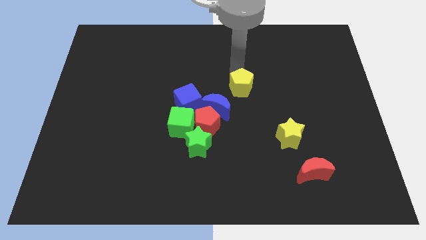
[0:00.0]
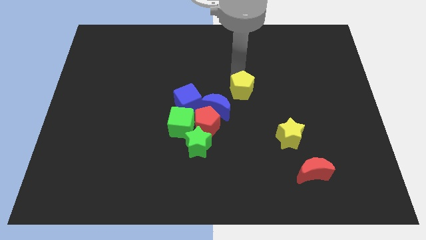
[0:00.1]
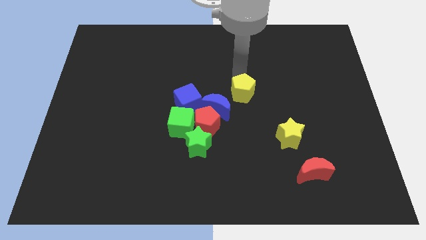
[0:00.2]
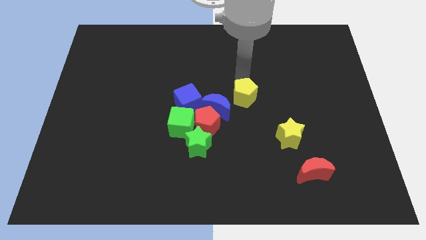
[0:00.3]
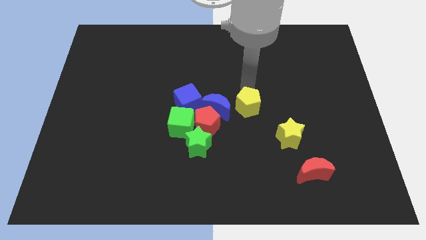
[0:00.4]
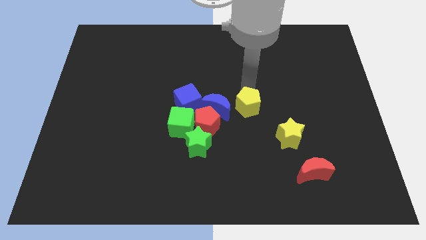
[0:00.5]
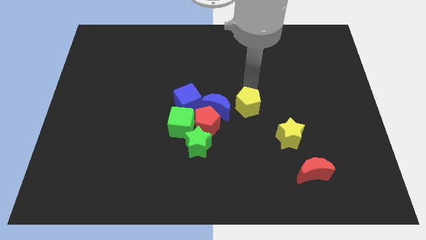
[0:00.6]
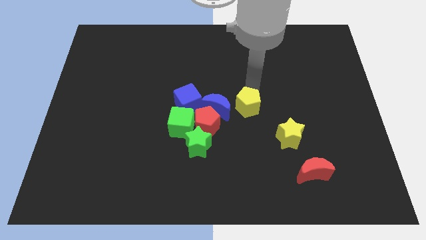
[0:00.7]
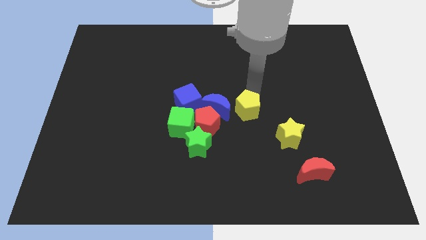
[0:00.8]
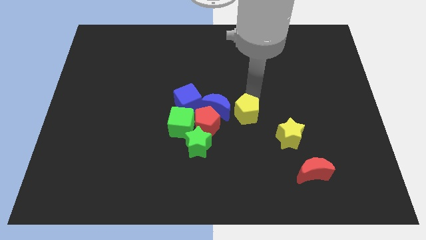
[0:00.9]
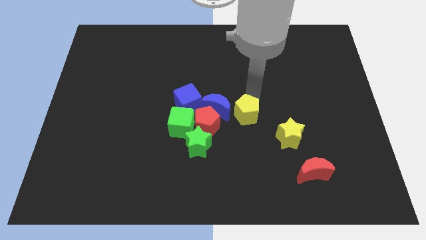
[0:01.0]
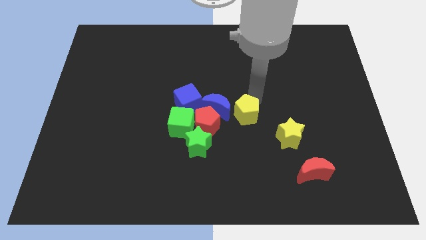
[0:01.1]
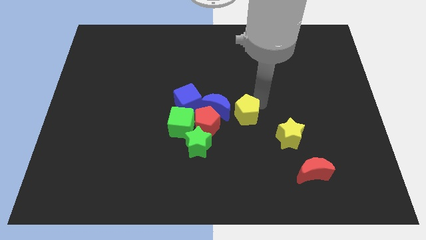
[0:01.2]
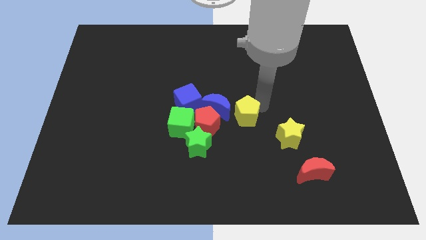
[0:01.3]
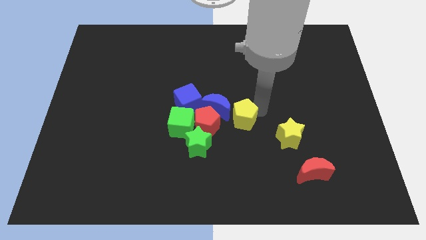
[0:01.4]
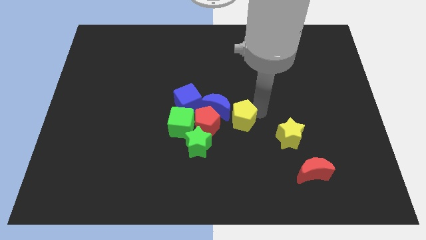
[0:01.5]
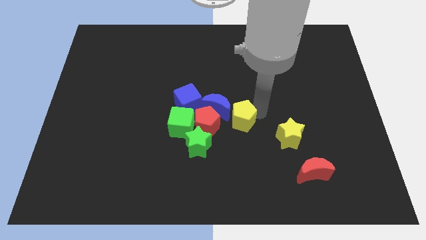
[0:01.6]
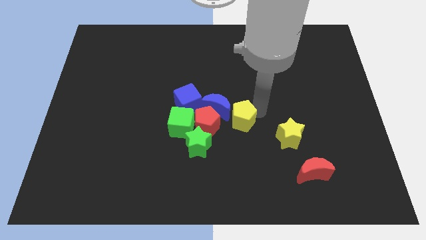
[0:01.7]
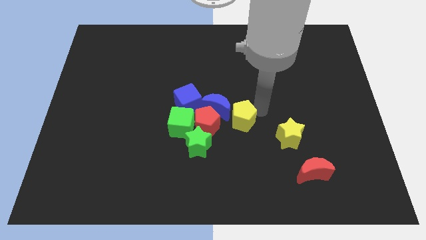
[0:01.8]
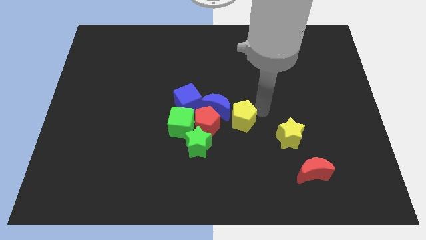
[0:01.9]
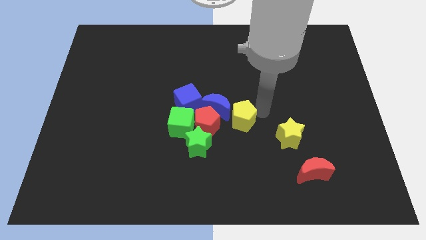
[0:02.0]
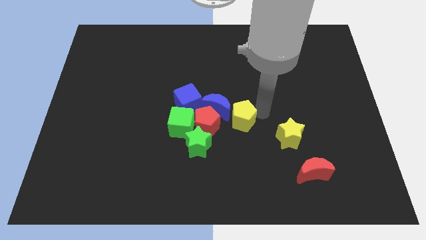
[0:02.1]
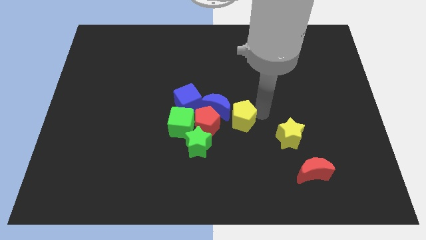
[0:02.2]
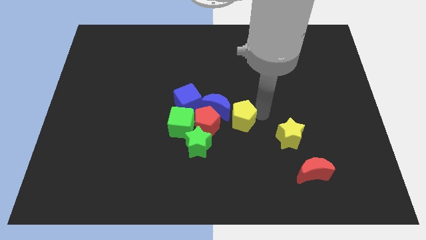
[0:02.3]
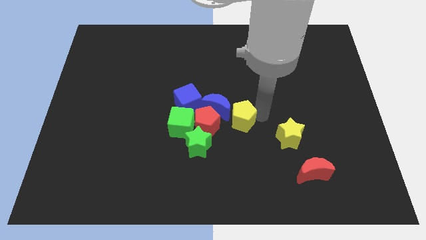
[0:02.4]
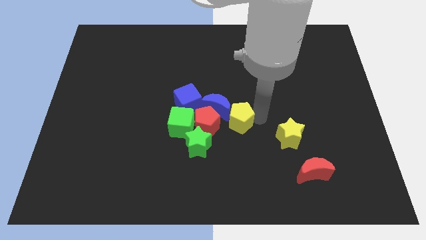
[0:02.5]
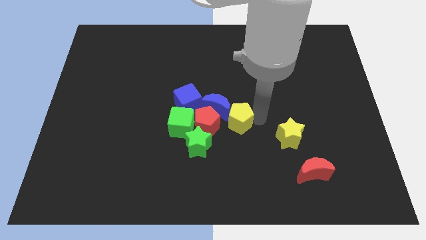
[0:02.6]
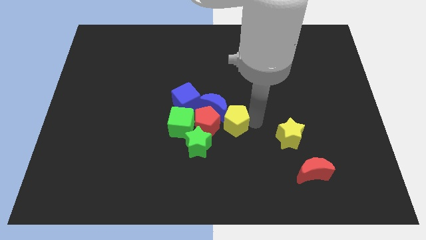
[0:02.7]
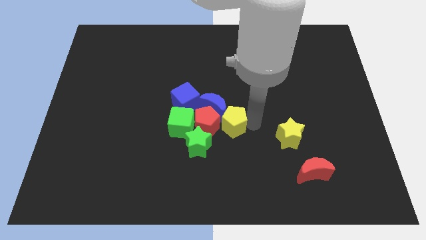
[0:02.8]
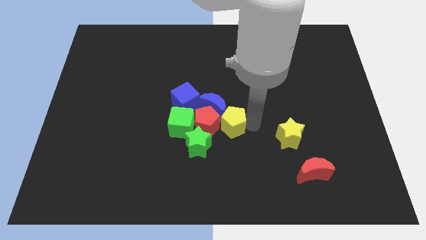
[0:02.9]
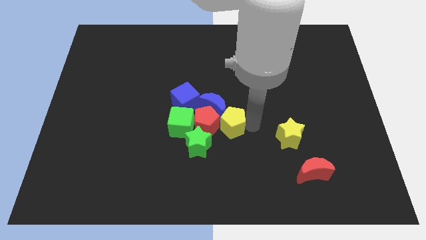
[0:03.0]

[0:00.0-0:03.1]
bring the yellow pentagon into the right side of the red pentagon

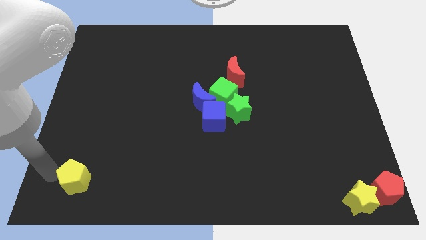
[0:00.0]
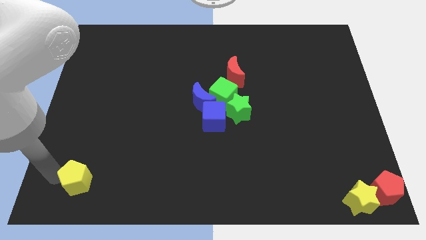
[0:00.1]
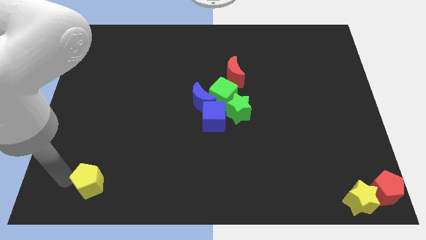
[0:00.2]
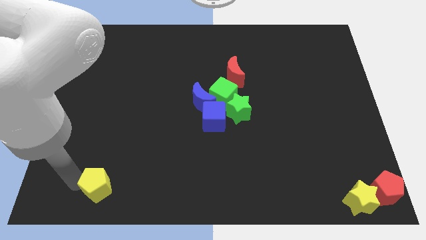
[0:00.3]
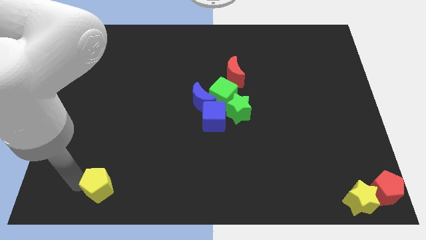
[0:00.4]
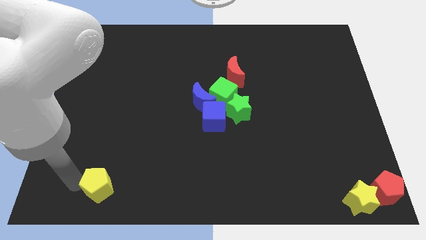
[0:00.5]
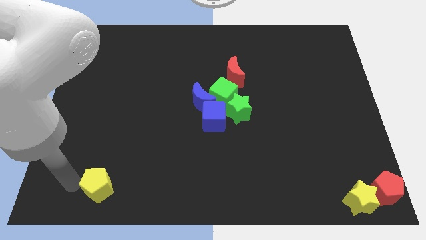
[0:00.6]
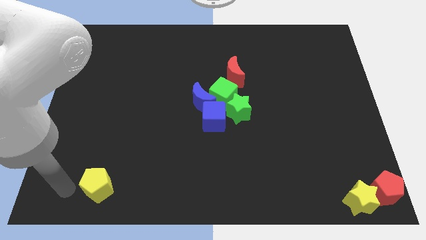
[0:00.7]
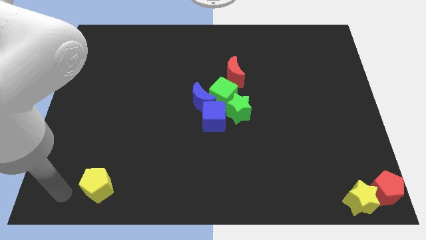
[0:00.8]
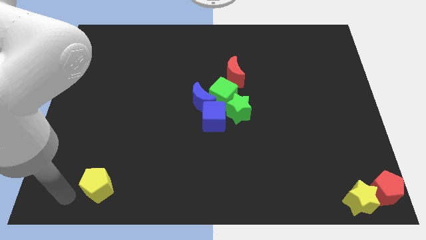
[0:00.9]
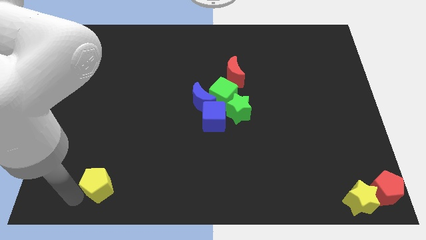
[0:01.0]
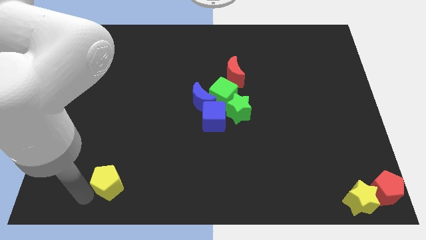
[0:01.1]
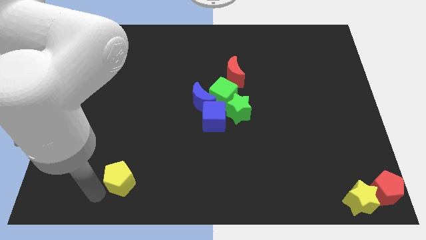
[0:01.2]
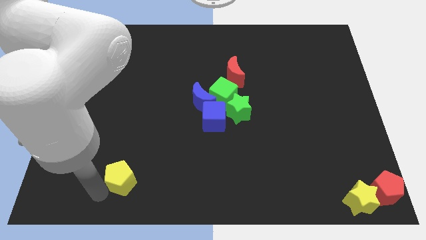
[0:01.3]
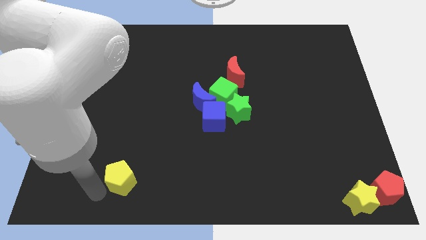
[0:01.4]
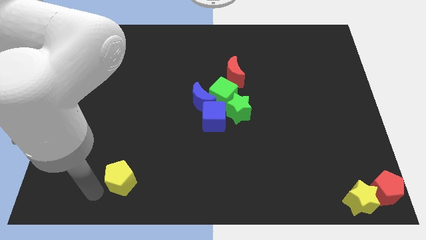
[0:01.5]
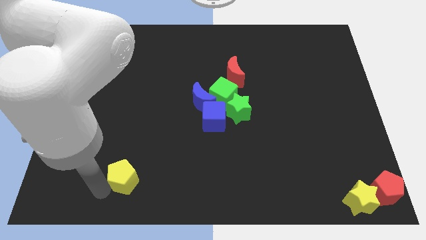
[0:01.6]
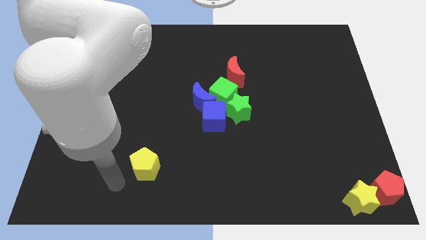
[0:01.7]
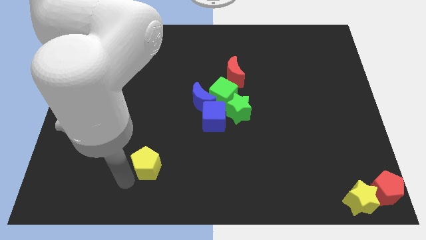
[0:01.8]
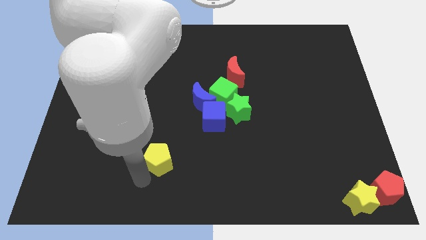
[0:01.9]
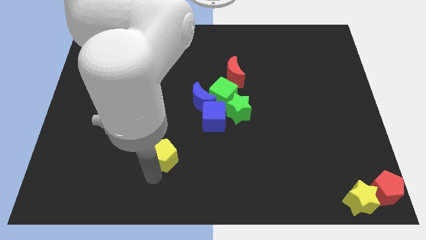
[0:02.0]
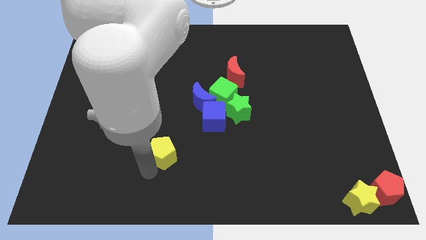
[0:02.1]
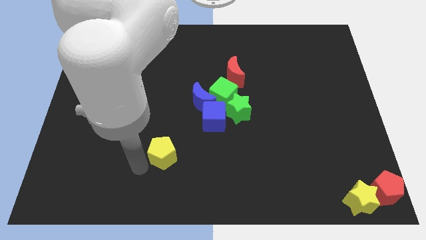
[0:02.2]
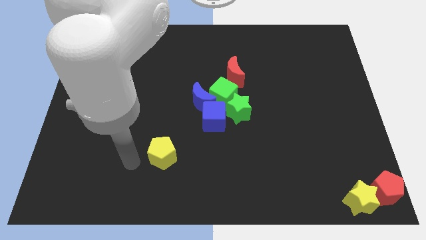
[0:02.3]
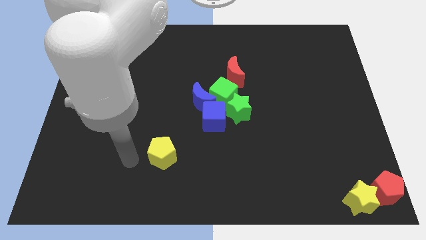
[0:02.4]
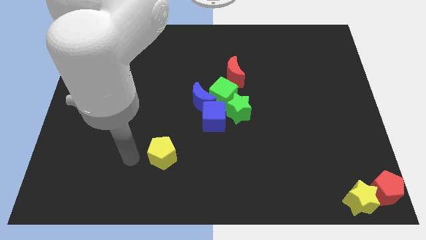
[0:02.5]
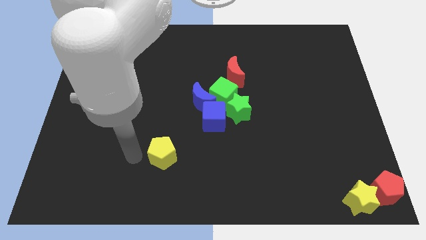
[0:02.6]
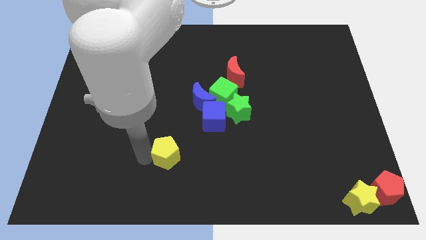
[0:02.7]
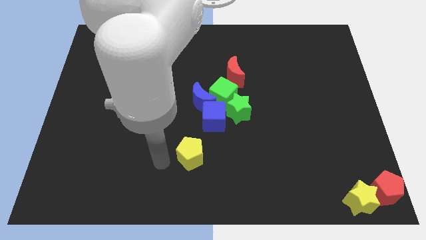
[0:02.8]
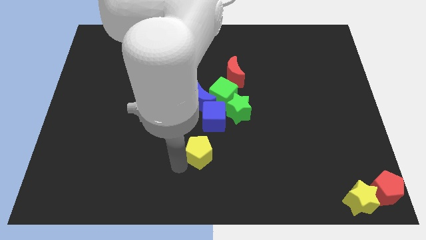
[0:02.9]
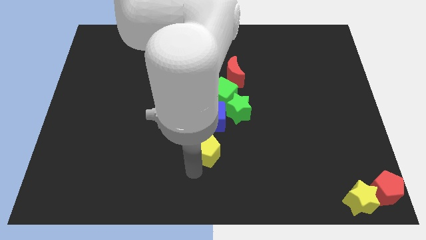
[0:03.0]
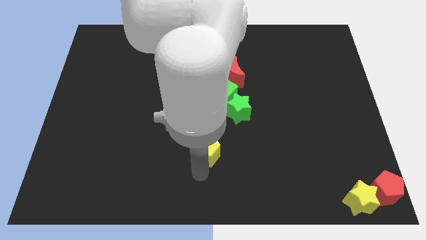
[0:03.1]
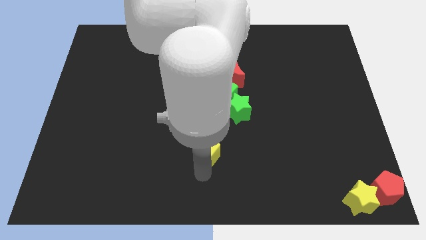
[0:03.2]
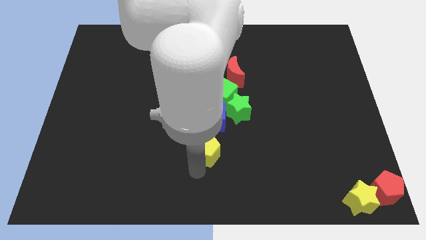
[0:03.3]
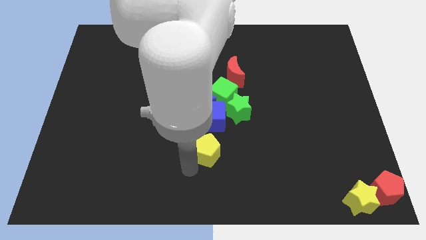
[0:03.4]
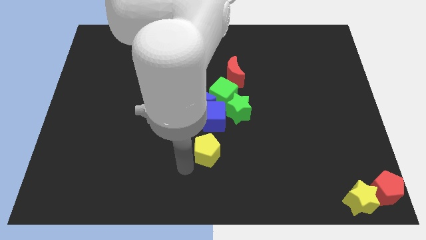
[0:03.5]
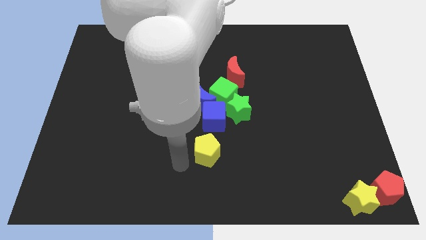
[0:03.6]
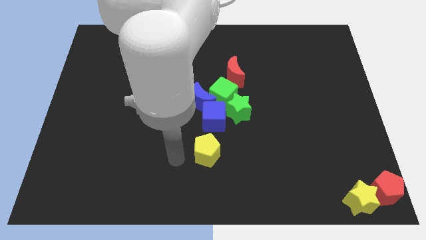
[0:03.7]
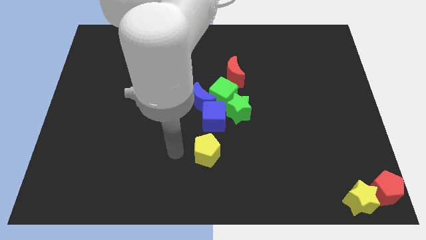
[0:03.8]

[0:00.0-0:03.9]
move yellow pentagon to the bottom of blue cube

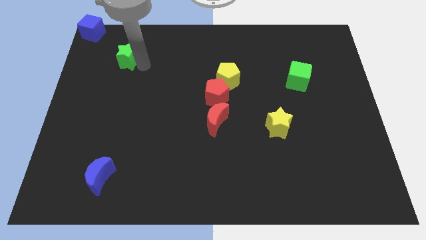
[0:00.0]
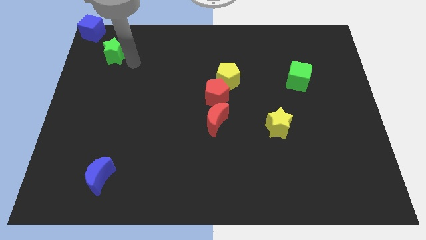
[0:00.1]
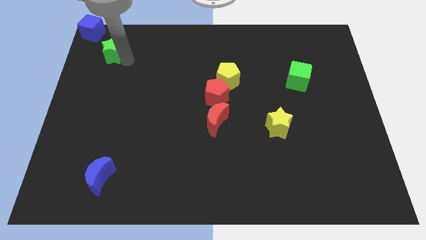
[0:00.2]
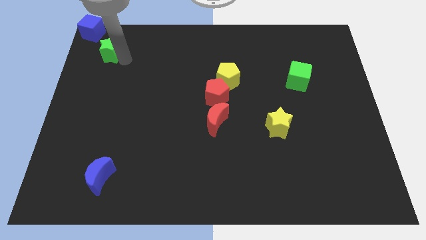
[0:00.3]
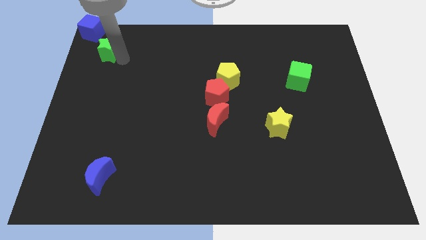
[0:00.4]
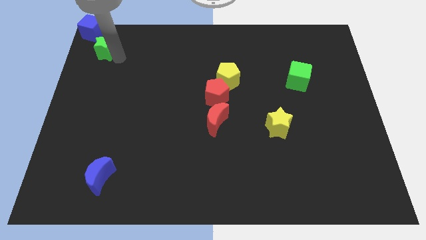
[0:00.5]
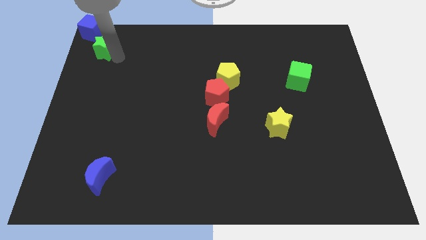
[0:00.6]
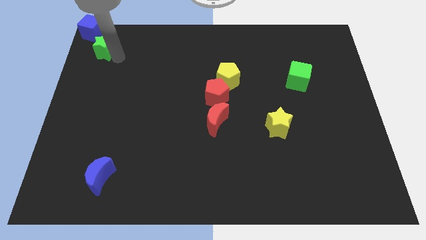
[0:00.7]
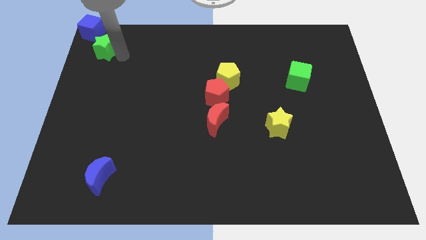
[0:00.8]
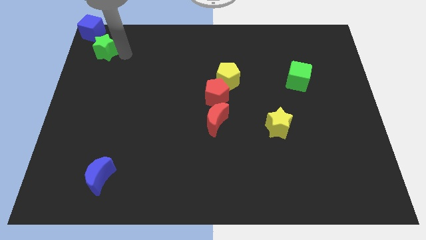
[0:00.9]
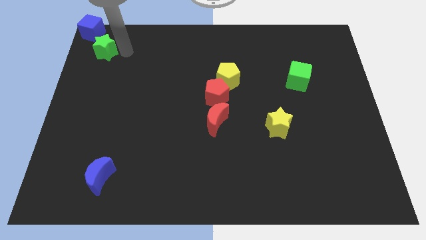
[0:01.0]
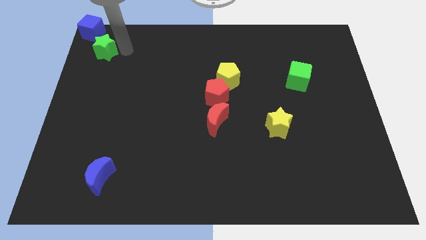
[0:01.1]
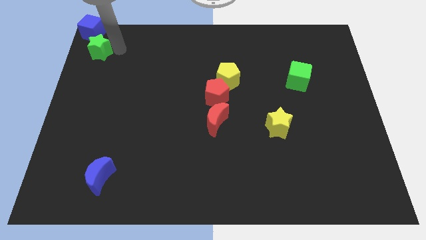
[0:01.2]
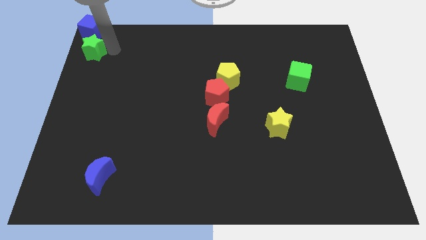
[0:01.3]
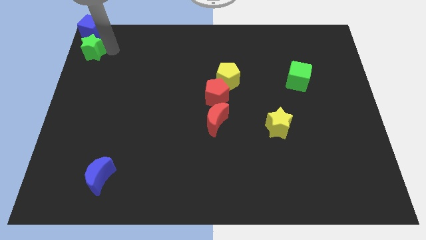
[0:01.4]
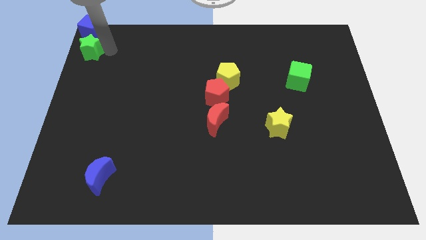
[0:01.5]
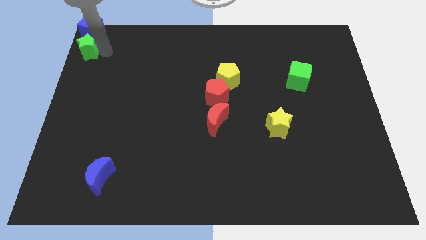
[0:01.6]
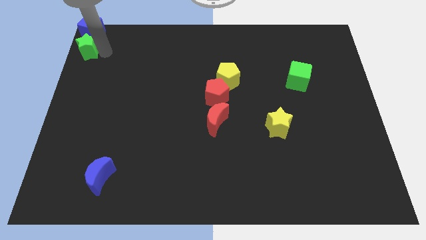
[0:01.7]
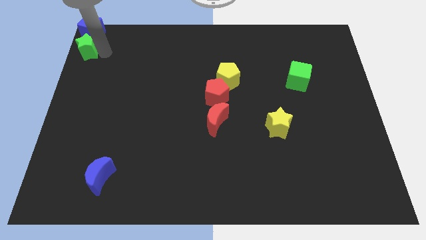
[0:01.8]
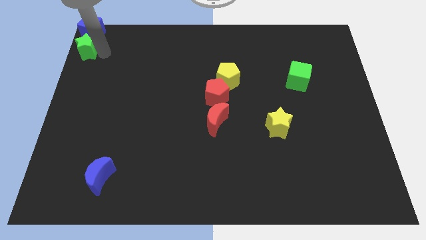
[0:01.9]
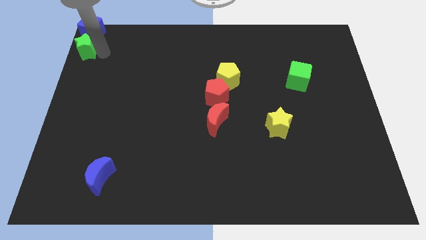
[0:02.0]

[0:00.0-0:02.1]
place the green star below the blue cube

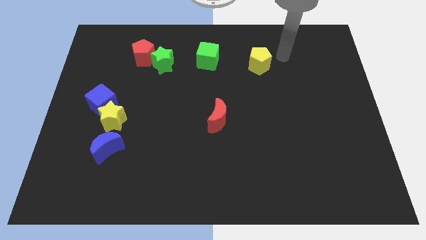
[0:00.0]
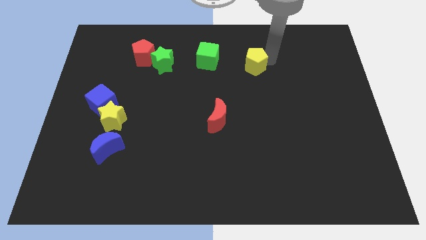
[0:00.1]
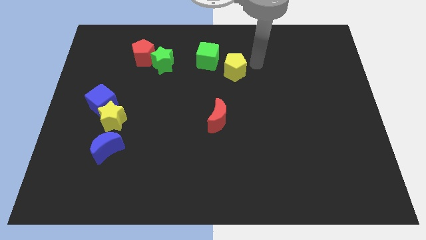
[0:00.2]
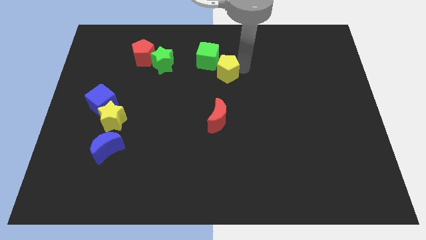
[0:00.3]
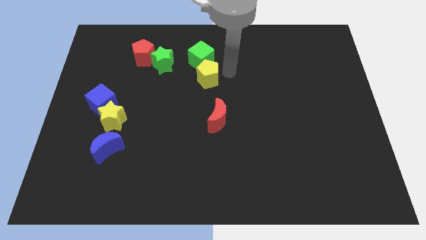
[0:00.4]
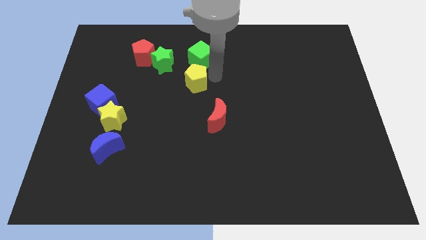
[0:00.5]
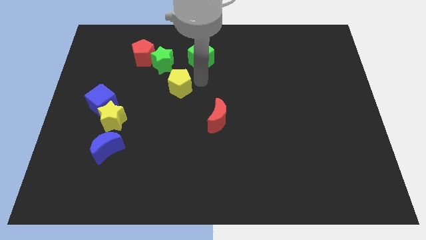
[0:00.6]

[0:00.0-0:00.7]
move the yellow pentagon below the green cube
